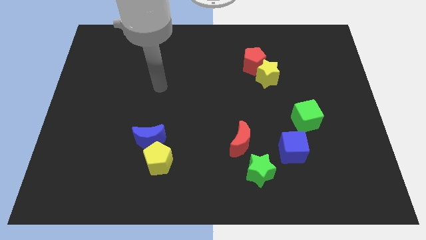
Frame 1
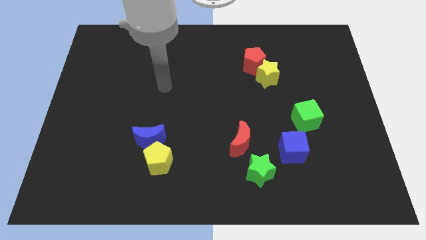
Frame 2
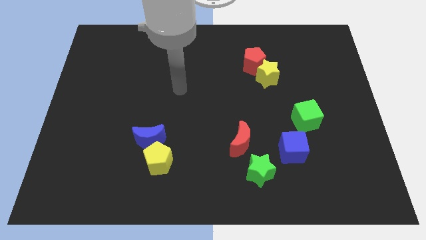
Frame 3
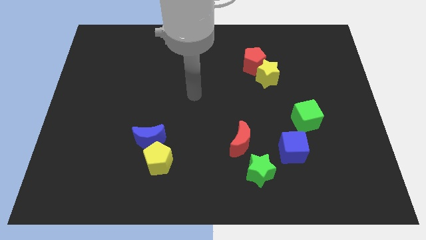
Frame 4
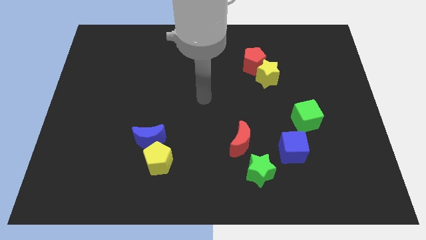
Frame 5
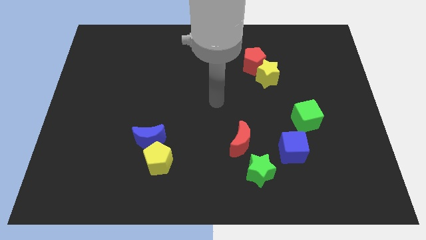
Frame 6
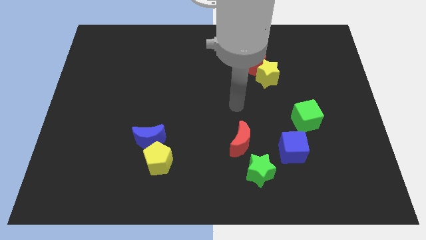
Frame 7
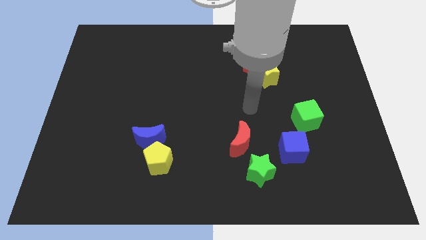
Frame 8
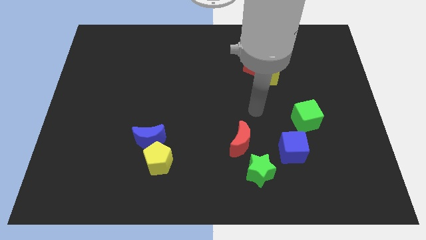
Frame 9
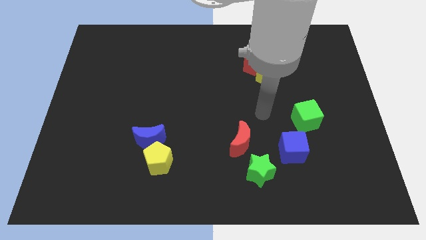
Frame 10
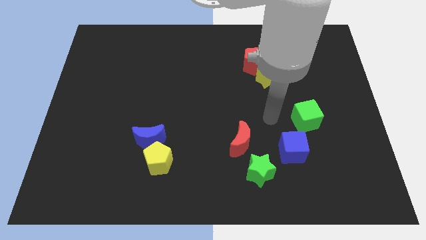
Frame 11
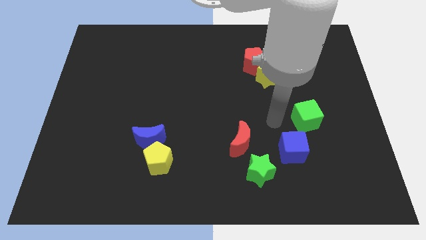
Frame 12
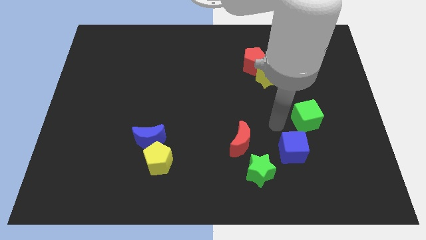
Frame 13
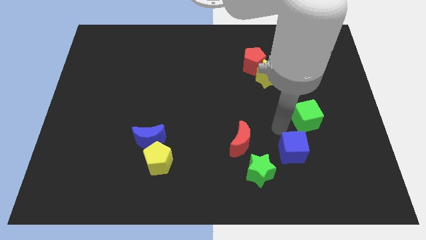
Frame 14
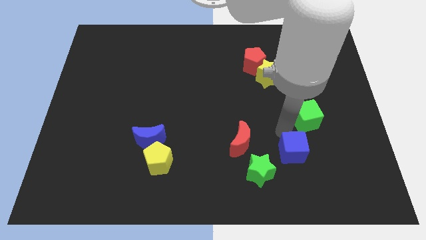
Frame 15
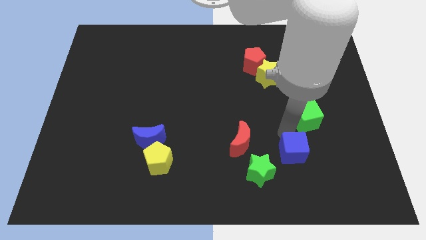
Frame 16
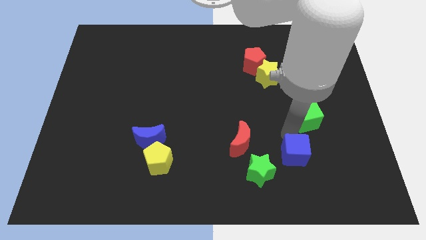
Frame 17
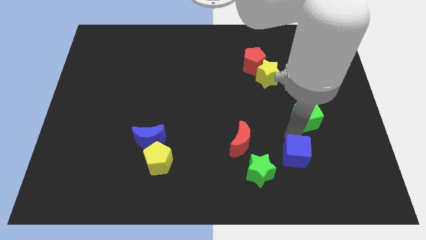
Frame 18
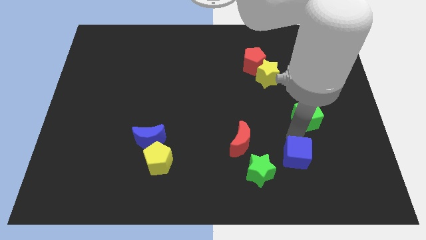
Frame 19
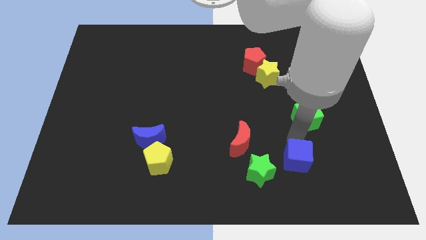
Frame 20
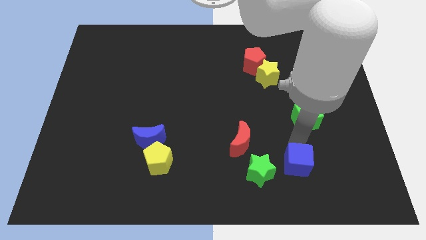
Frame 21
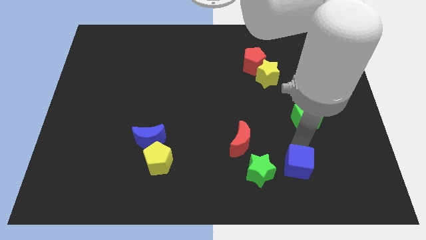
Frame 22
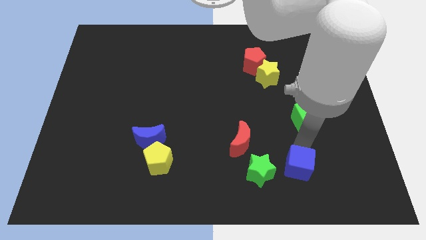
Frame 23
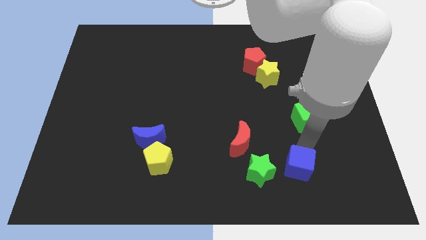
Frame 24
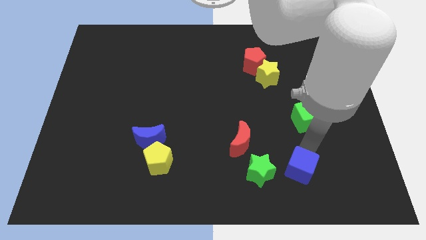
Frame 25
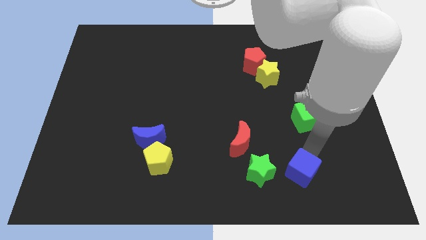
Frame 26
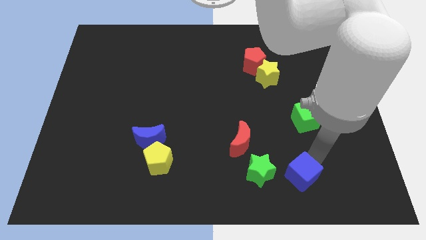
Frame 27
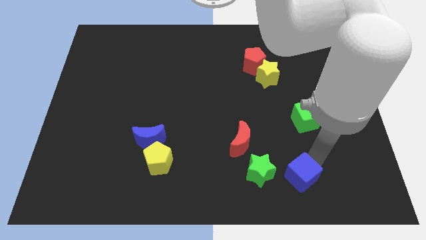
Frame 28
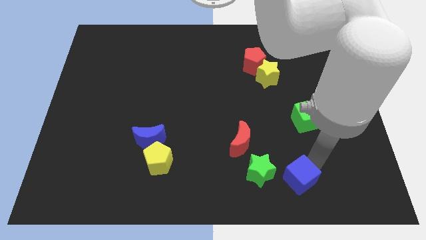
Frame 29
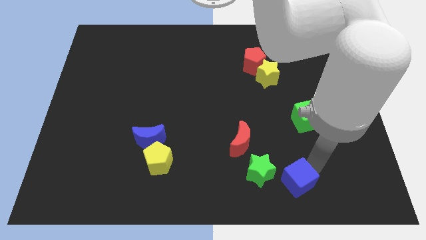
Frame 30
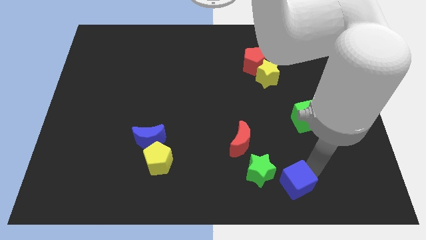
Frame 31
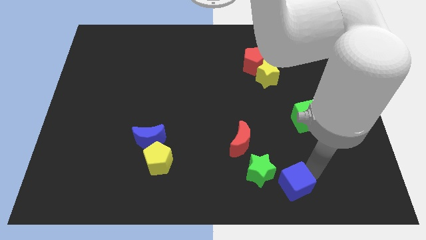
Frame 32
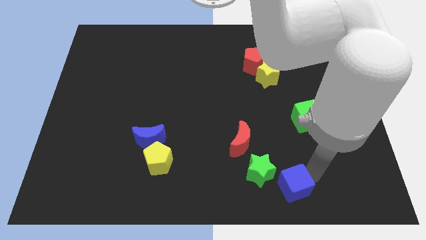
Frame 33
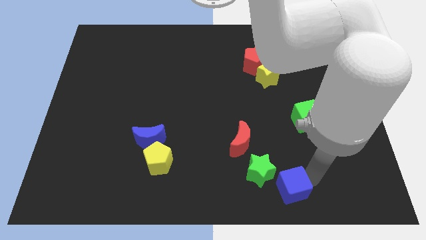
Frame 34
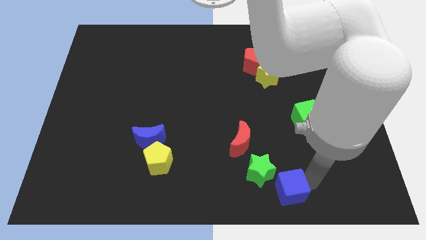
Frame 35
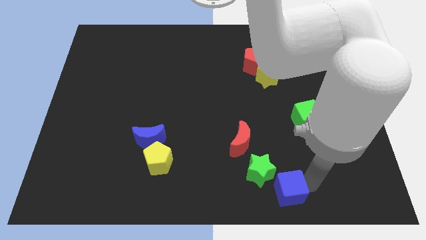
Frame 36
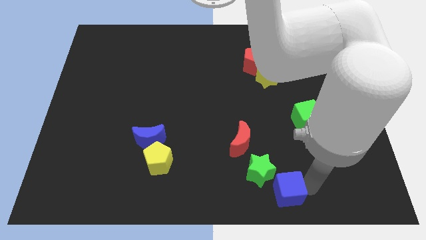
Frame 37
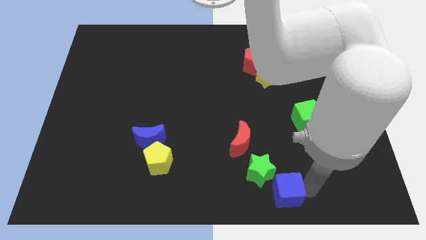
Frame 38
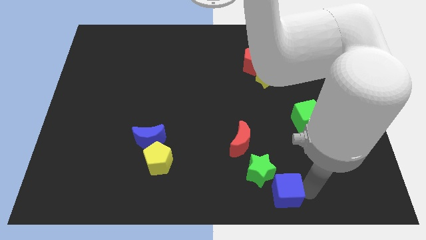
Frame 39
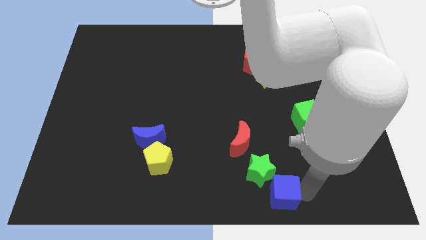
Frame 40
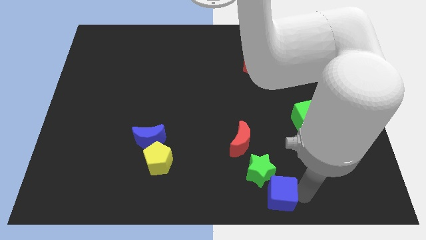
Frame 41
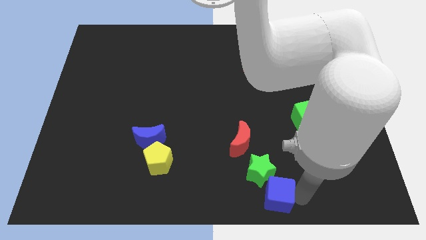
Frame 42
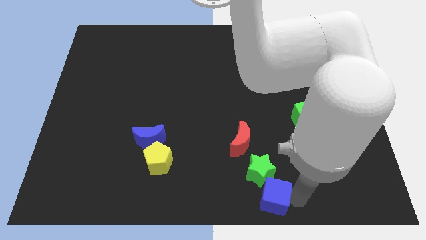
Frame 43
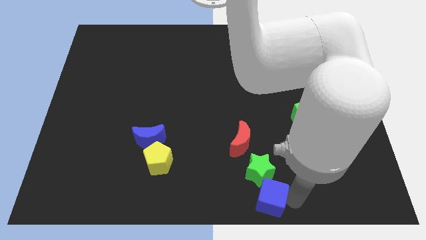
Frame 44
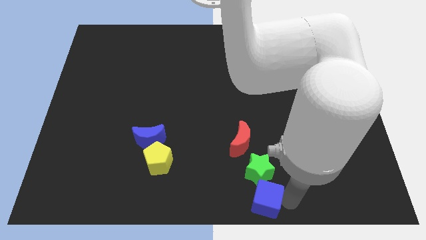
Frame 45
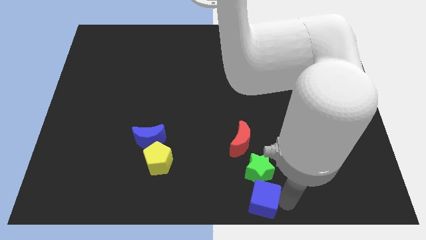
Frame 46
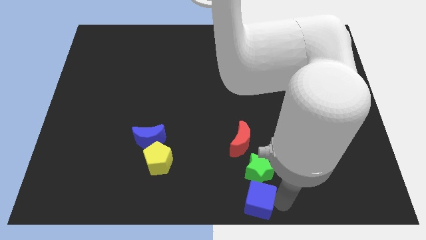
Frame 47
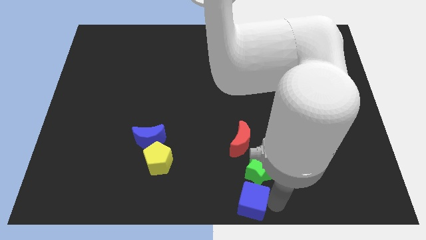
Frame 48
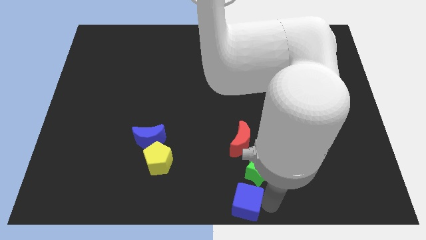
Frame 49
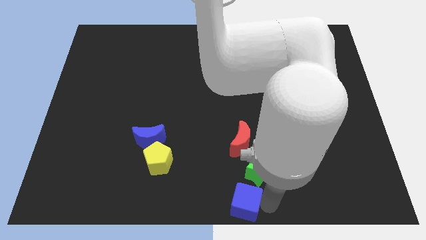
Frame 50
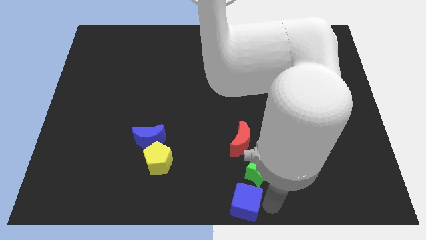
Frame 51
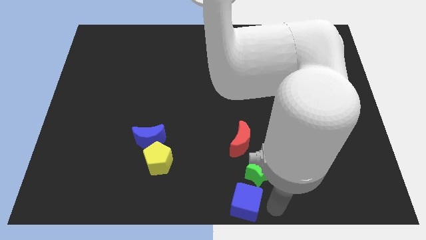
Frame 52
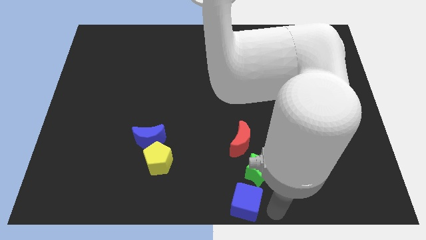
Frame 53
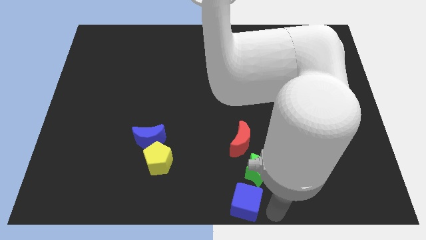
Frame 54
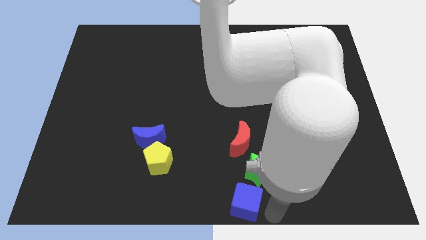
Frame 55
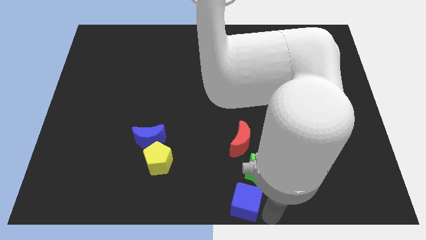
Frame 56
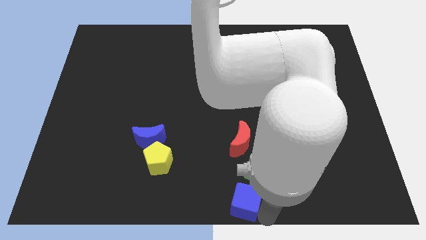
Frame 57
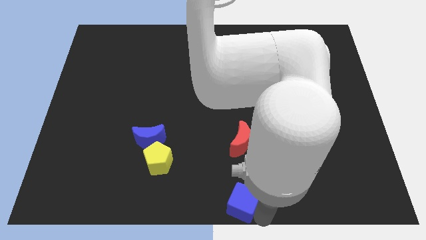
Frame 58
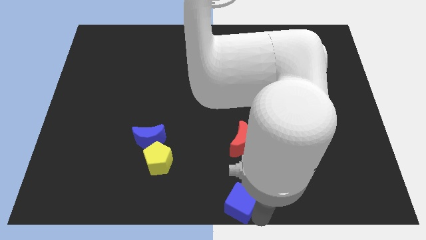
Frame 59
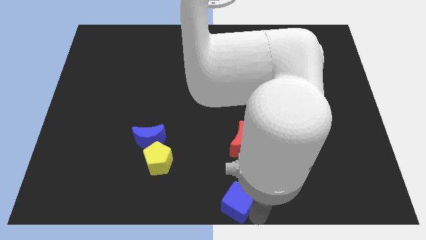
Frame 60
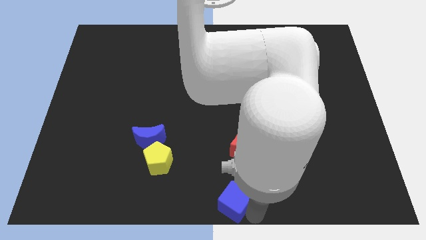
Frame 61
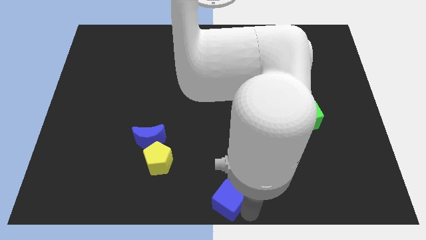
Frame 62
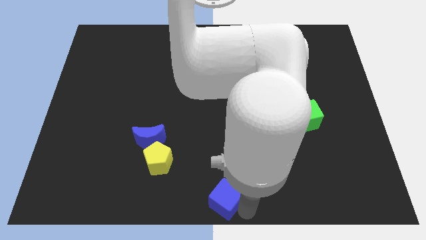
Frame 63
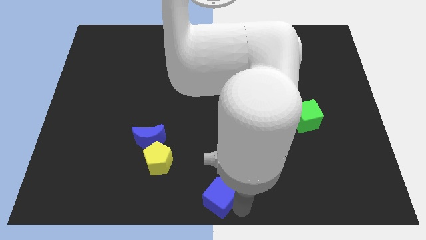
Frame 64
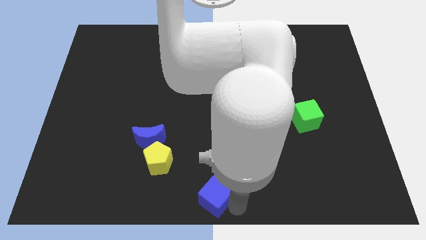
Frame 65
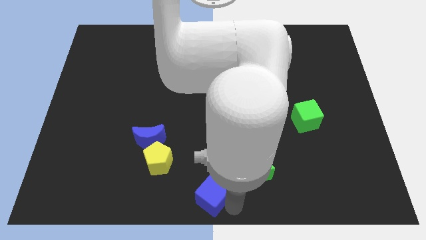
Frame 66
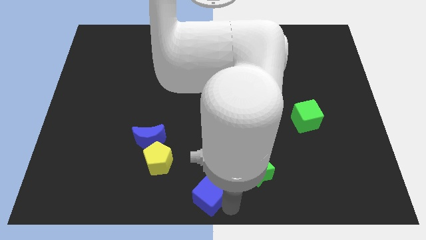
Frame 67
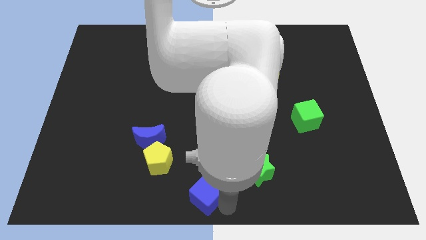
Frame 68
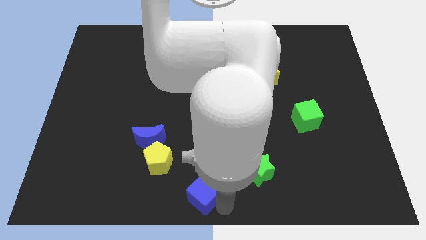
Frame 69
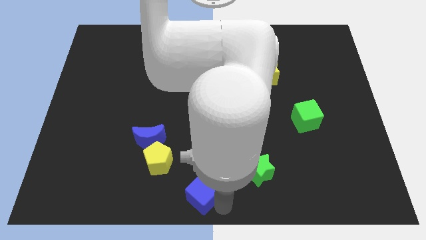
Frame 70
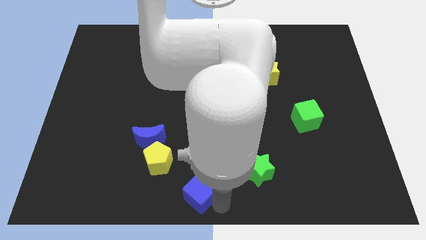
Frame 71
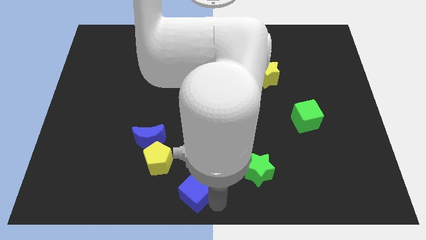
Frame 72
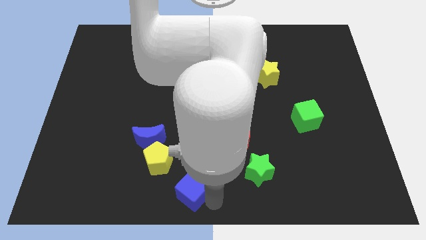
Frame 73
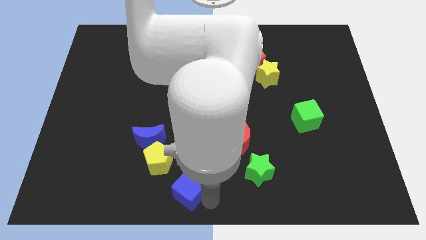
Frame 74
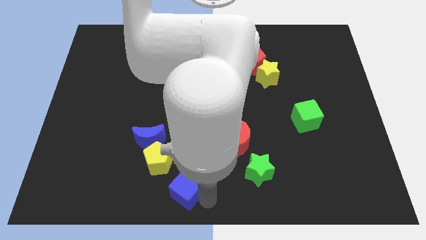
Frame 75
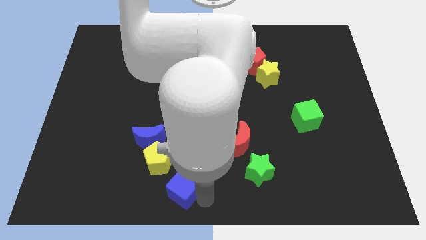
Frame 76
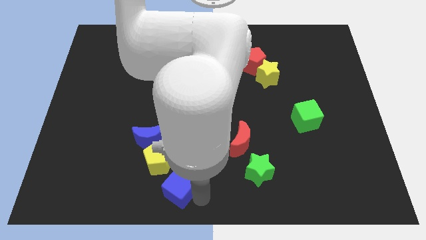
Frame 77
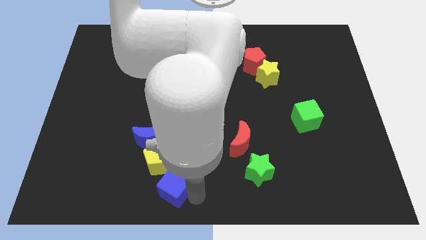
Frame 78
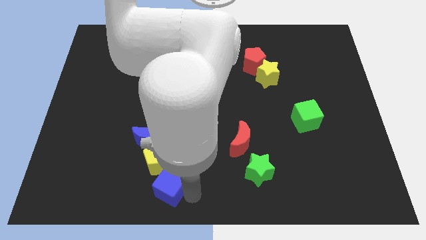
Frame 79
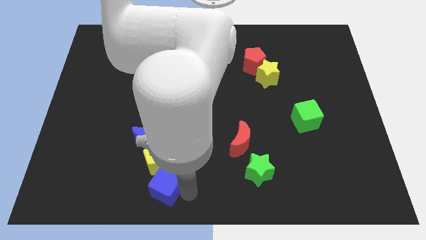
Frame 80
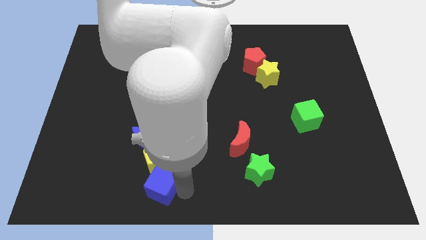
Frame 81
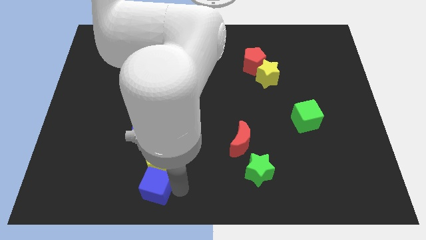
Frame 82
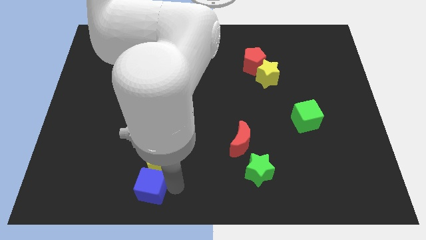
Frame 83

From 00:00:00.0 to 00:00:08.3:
push the blue cube towards the yellow pentagon
